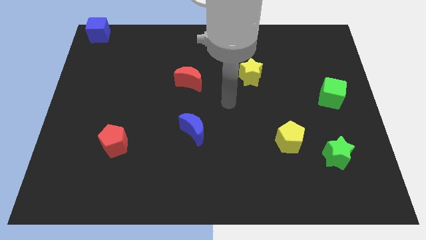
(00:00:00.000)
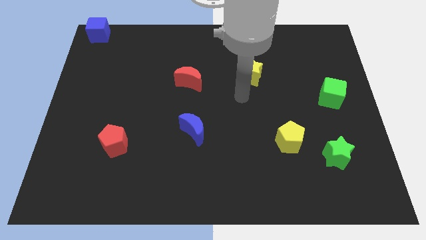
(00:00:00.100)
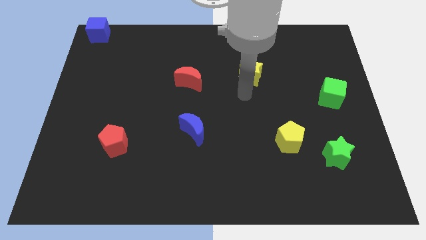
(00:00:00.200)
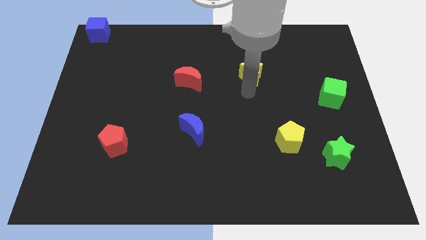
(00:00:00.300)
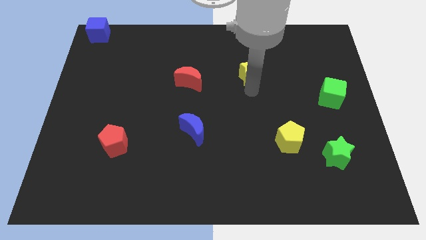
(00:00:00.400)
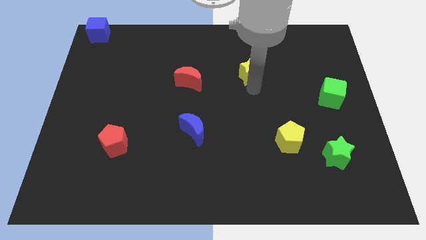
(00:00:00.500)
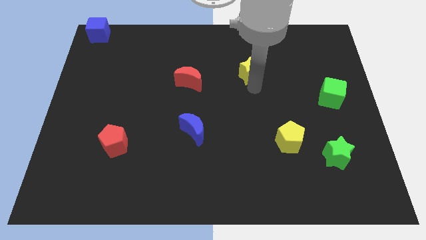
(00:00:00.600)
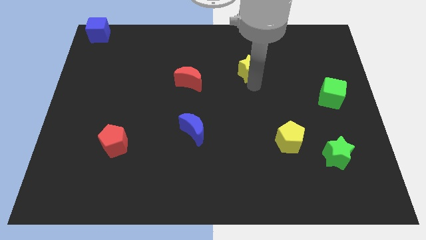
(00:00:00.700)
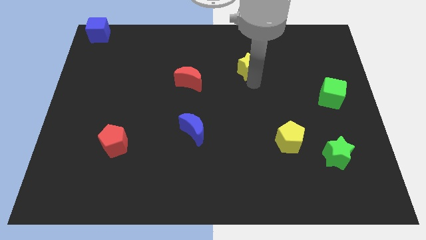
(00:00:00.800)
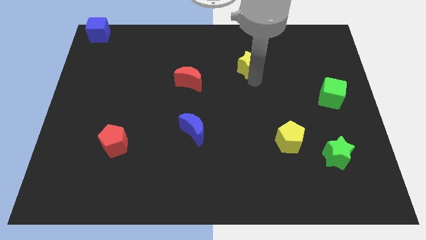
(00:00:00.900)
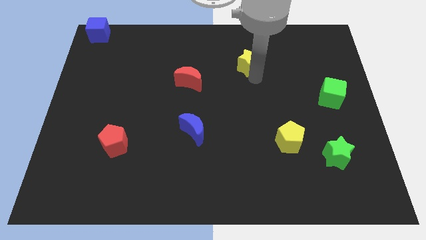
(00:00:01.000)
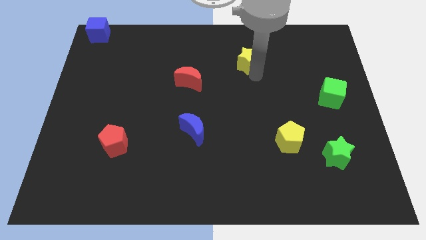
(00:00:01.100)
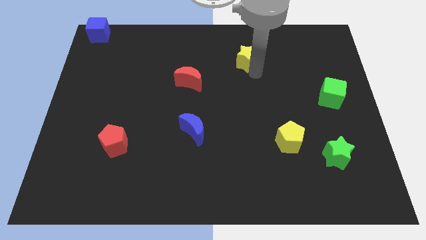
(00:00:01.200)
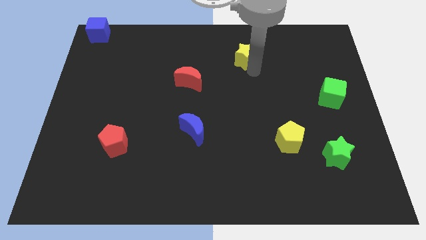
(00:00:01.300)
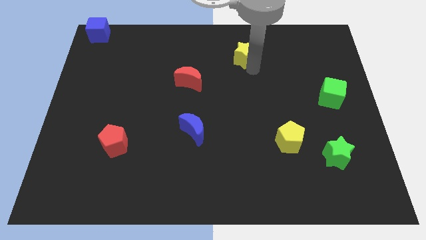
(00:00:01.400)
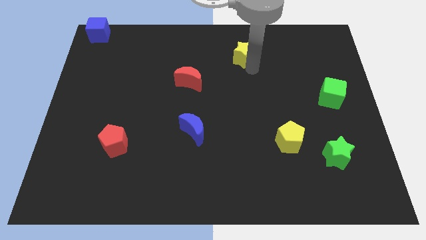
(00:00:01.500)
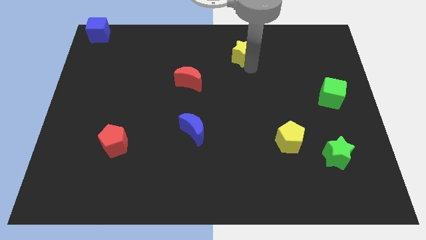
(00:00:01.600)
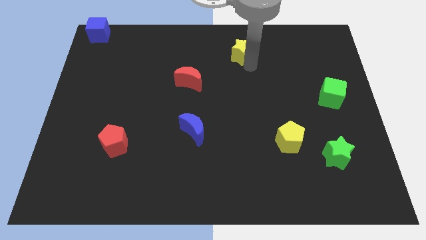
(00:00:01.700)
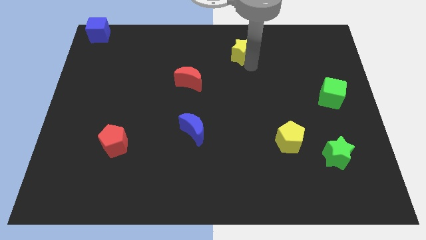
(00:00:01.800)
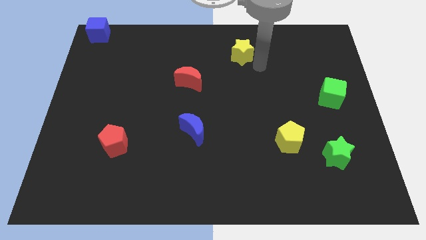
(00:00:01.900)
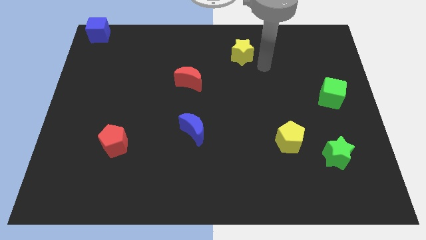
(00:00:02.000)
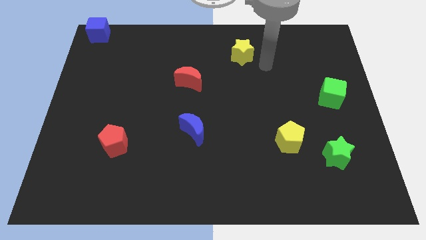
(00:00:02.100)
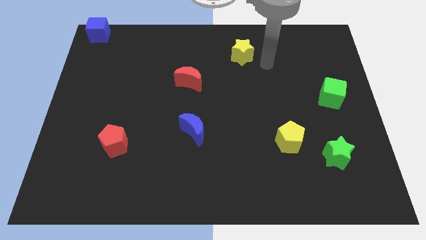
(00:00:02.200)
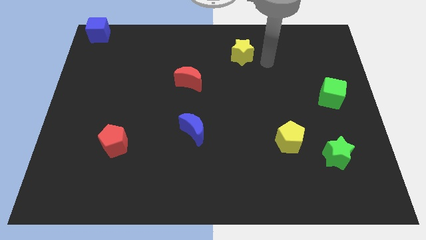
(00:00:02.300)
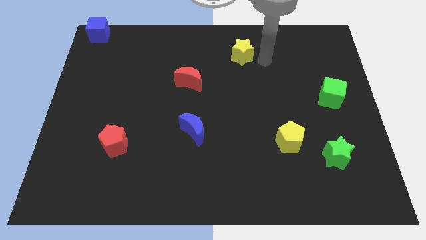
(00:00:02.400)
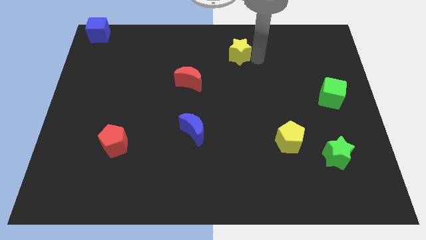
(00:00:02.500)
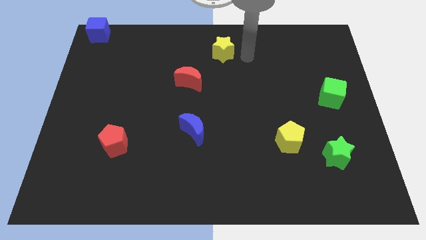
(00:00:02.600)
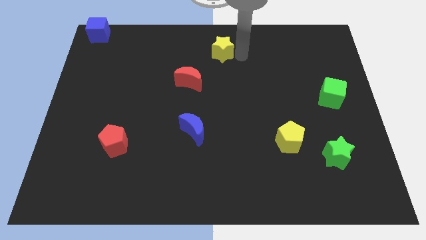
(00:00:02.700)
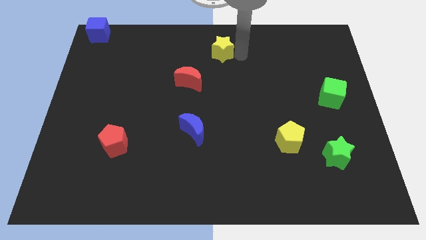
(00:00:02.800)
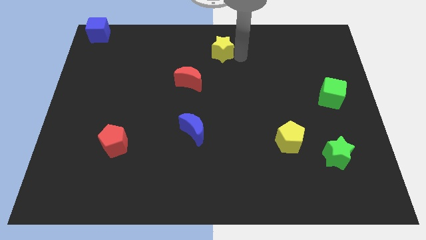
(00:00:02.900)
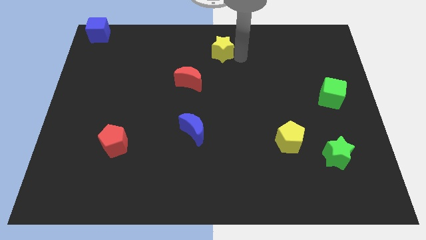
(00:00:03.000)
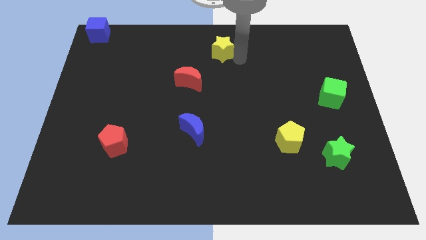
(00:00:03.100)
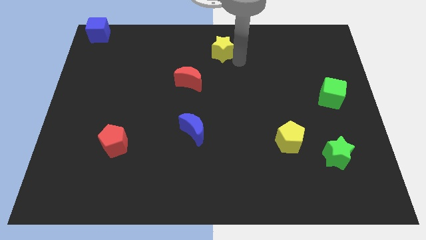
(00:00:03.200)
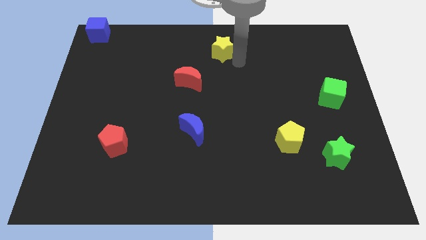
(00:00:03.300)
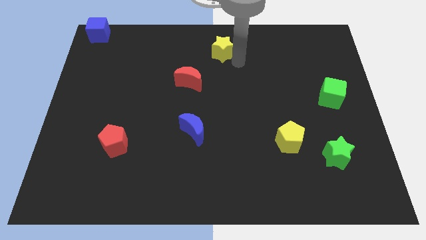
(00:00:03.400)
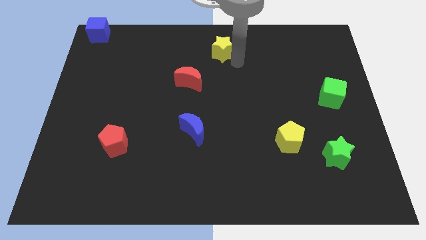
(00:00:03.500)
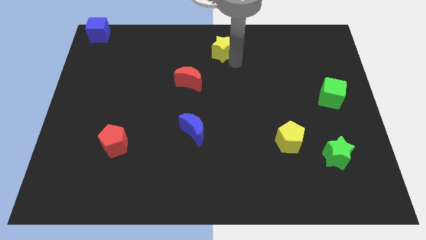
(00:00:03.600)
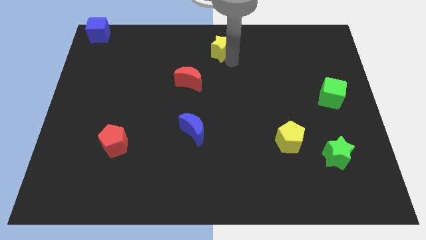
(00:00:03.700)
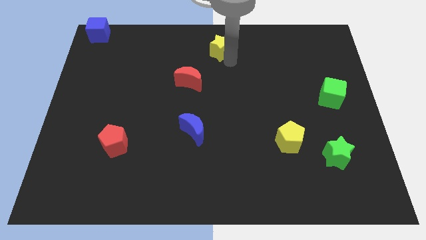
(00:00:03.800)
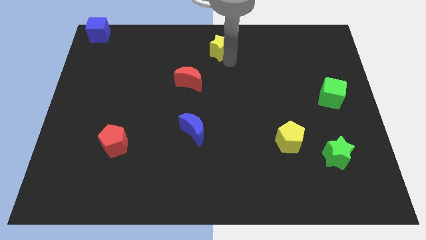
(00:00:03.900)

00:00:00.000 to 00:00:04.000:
move the yellow star towards the top center of the board

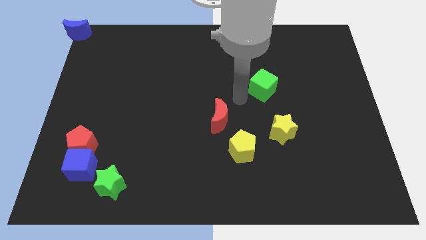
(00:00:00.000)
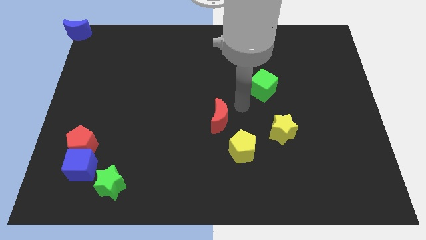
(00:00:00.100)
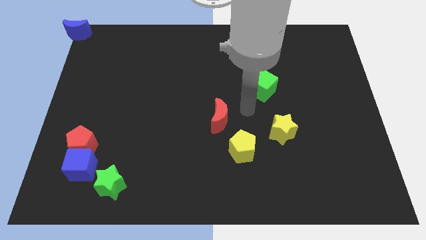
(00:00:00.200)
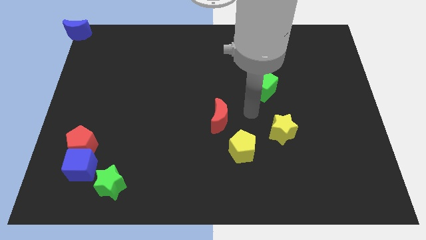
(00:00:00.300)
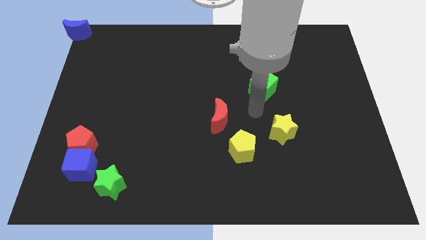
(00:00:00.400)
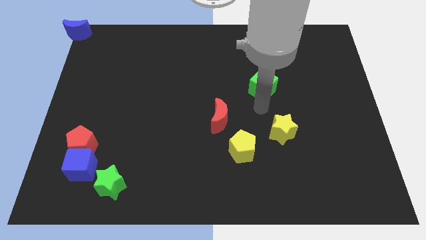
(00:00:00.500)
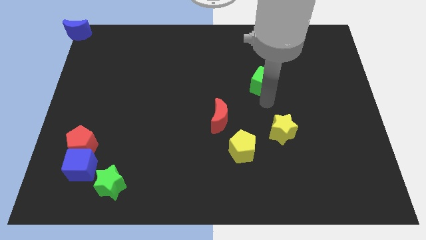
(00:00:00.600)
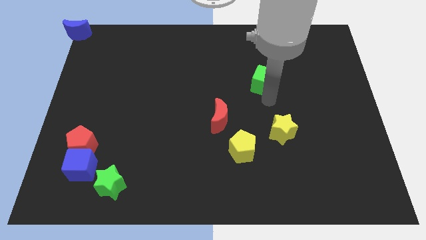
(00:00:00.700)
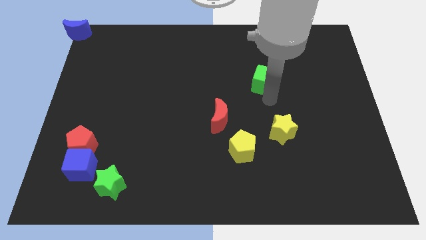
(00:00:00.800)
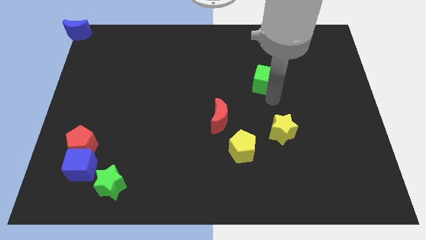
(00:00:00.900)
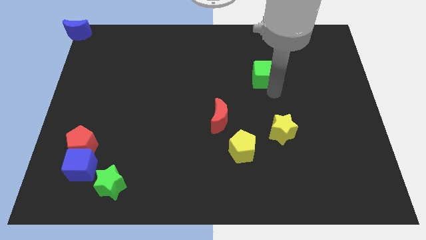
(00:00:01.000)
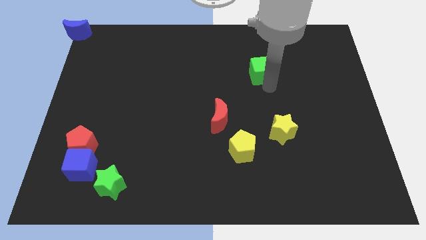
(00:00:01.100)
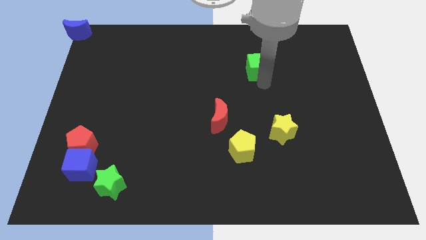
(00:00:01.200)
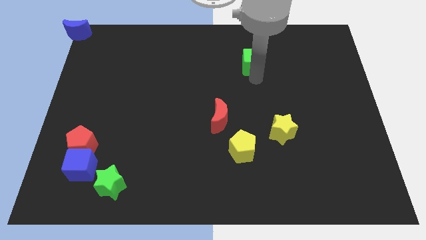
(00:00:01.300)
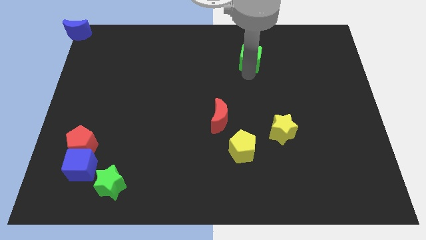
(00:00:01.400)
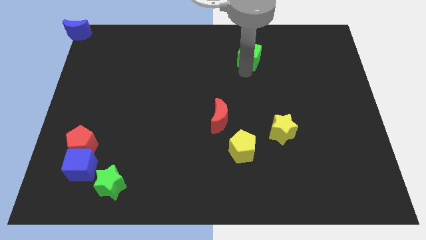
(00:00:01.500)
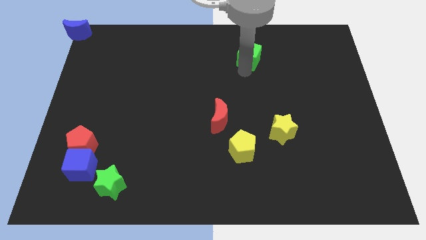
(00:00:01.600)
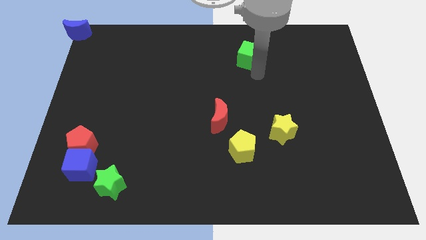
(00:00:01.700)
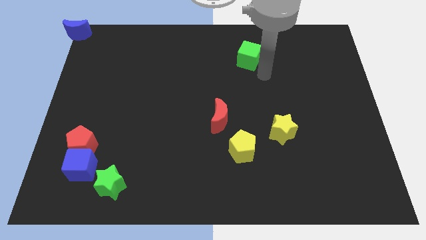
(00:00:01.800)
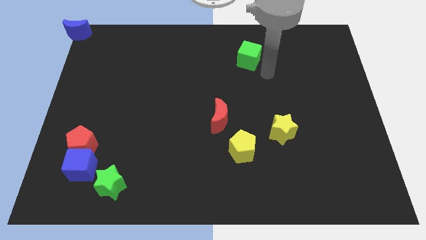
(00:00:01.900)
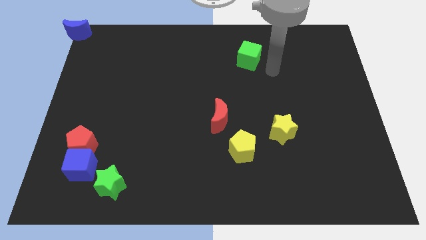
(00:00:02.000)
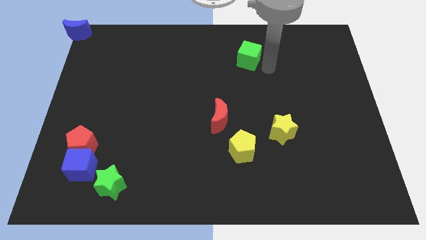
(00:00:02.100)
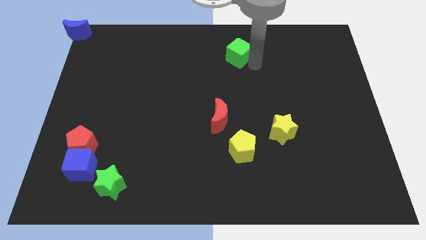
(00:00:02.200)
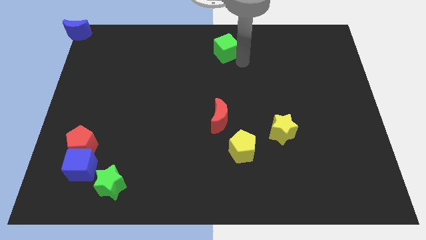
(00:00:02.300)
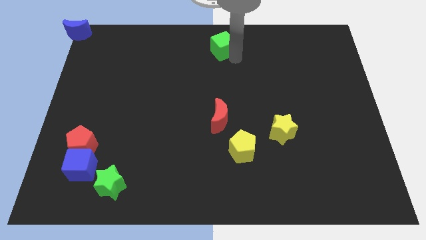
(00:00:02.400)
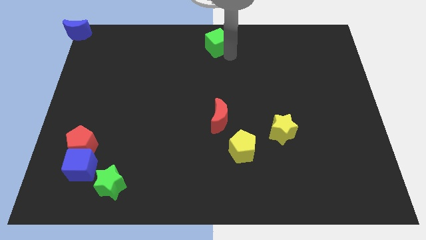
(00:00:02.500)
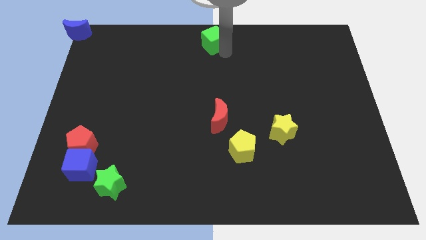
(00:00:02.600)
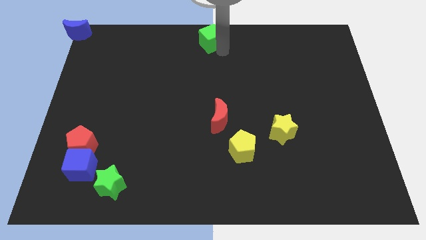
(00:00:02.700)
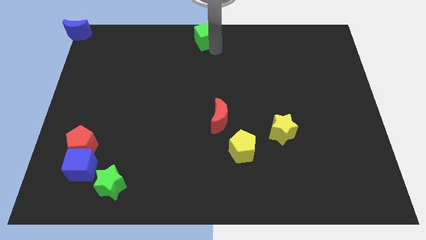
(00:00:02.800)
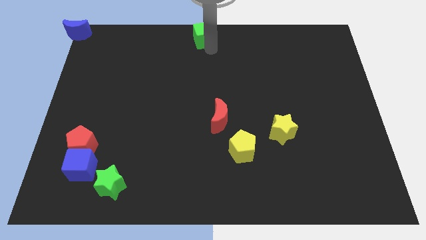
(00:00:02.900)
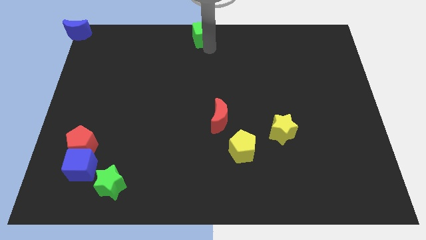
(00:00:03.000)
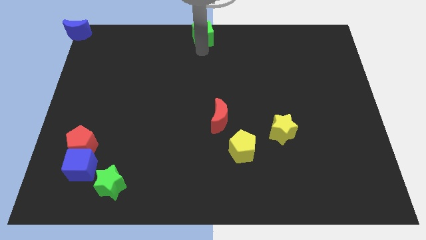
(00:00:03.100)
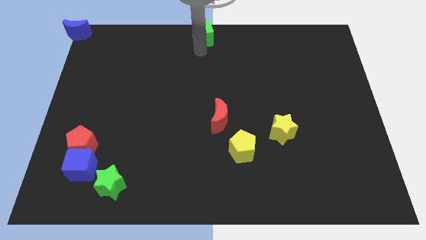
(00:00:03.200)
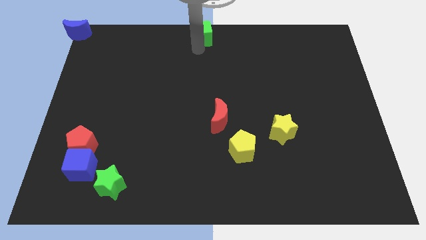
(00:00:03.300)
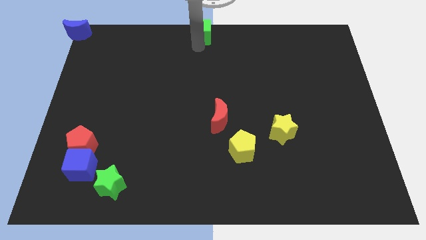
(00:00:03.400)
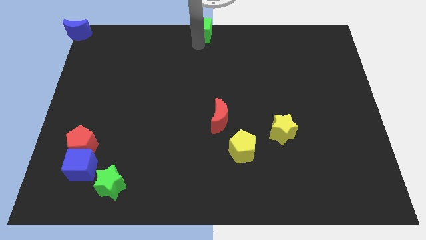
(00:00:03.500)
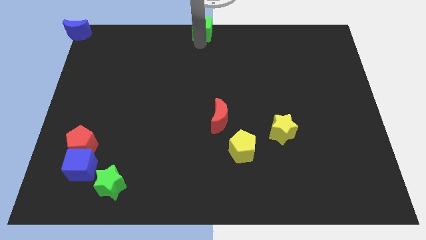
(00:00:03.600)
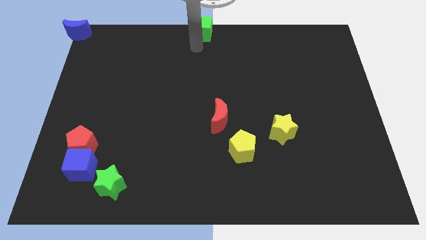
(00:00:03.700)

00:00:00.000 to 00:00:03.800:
push the green cube to the top center of the board

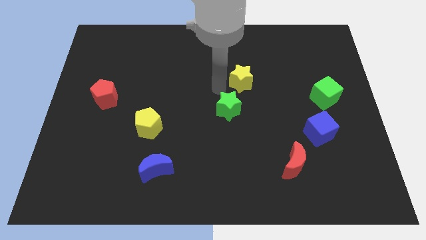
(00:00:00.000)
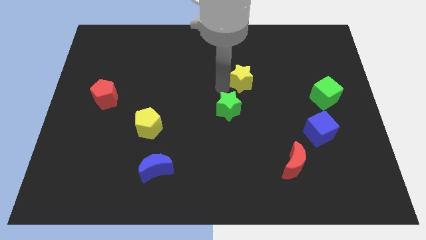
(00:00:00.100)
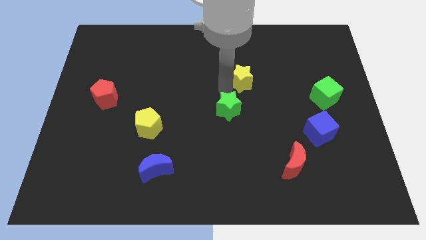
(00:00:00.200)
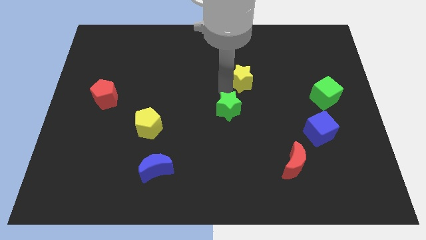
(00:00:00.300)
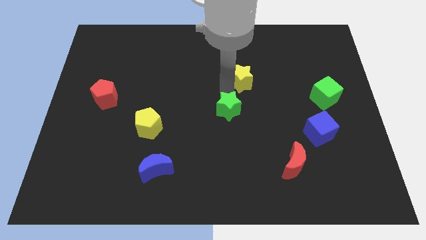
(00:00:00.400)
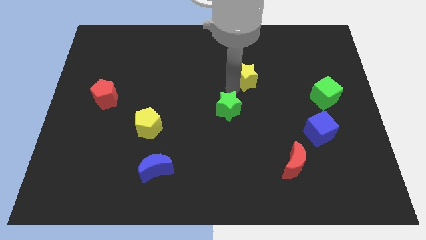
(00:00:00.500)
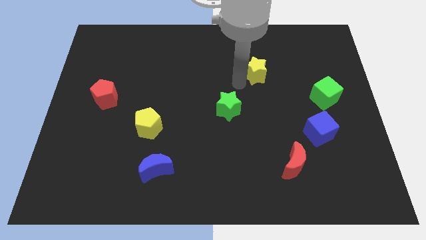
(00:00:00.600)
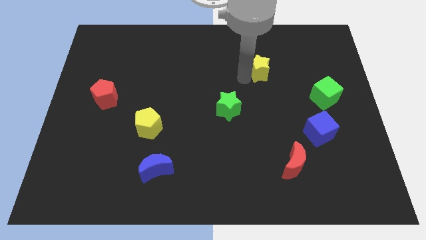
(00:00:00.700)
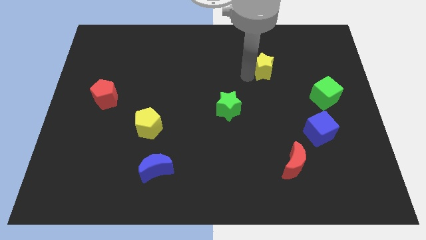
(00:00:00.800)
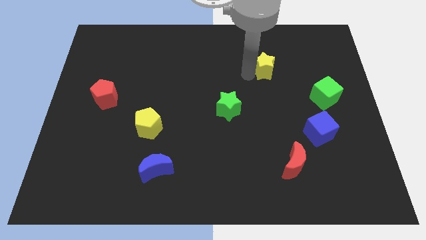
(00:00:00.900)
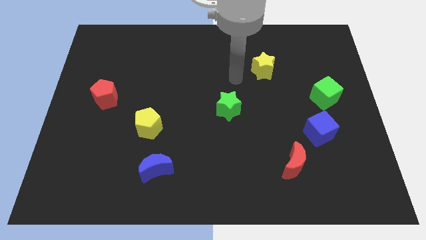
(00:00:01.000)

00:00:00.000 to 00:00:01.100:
push the yellow star diagonally above the top right side of the green star
